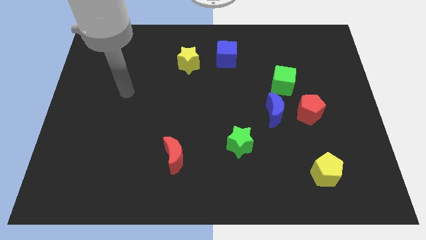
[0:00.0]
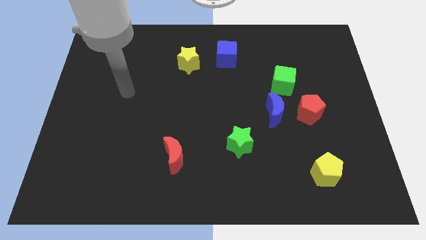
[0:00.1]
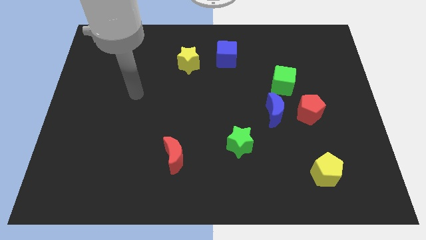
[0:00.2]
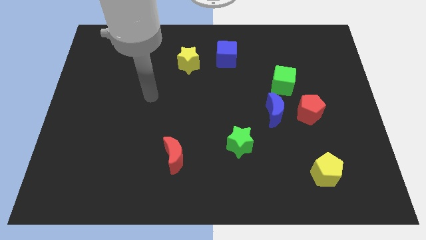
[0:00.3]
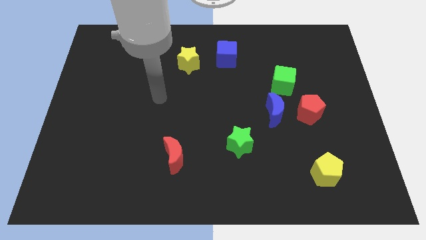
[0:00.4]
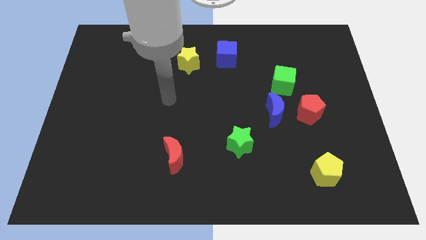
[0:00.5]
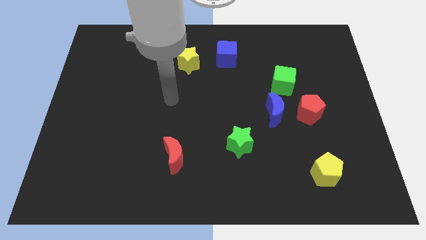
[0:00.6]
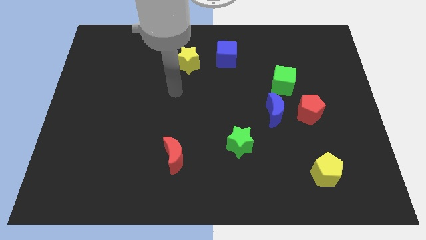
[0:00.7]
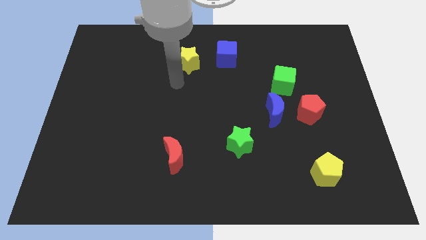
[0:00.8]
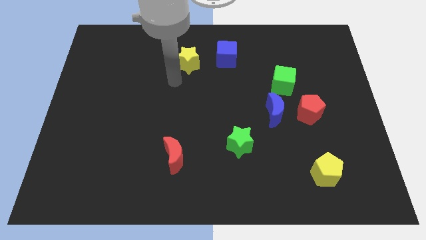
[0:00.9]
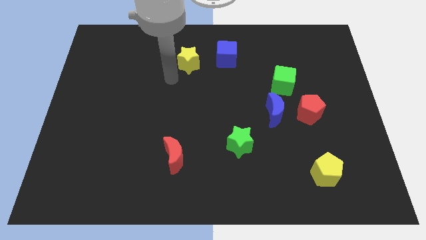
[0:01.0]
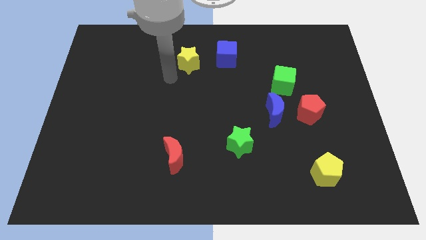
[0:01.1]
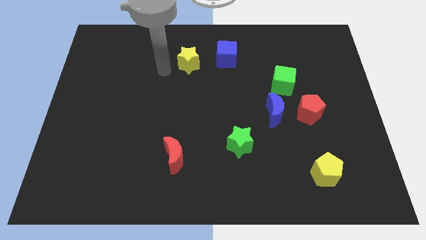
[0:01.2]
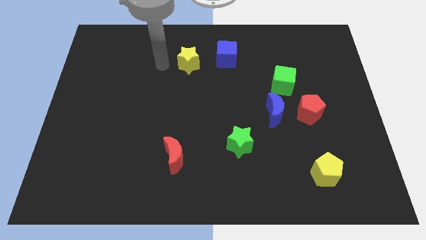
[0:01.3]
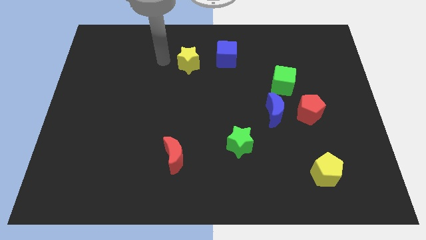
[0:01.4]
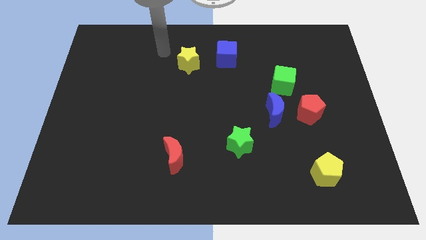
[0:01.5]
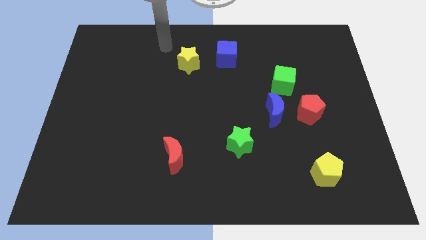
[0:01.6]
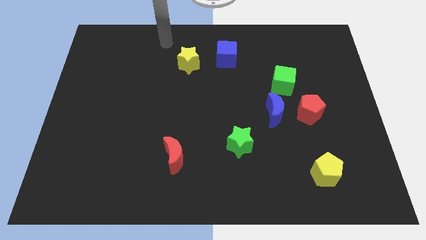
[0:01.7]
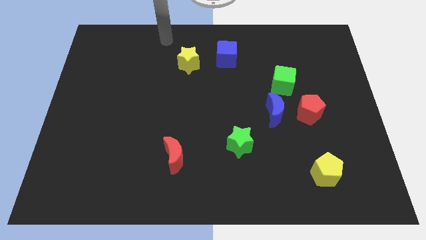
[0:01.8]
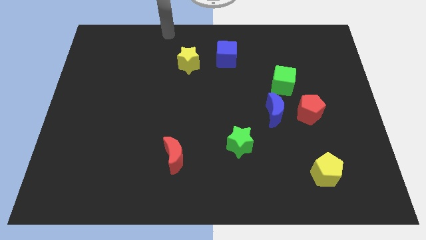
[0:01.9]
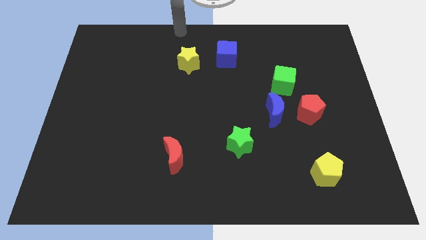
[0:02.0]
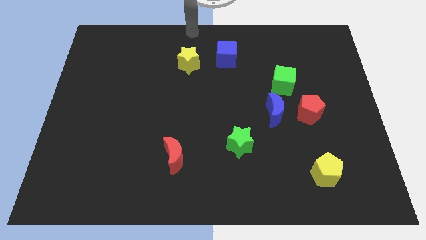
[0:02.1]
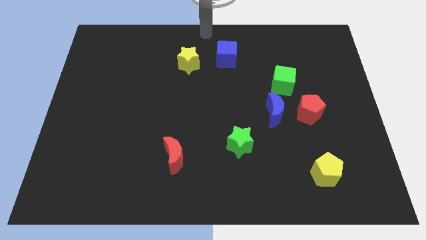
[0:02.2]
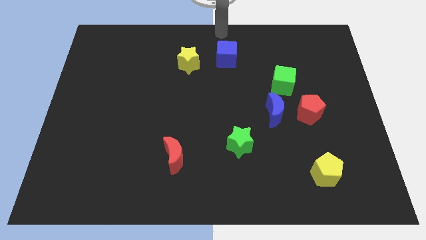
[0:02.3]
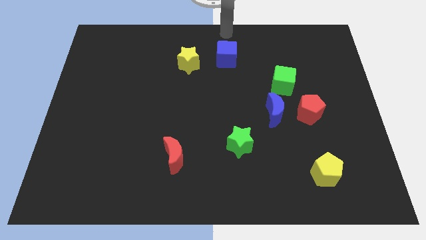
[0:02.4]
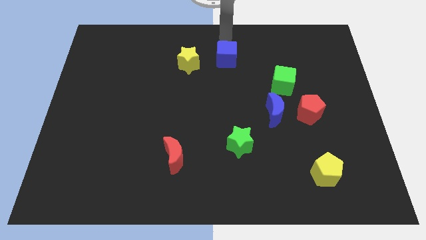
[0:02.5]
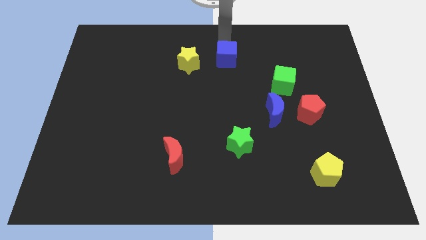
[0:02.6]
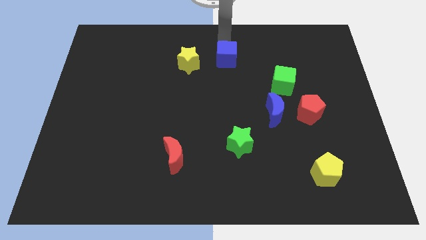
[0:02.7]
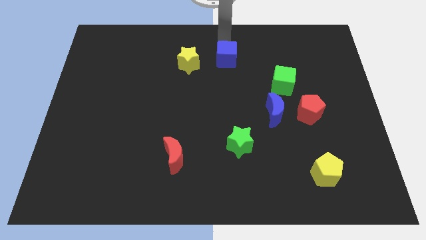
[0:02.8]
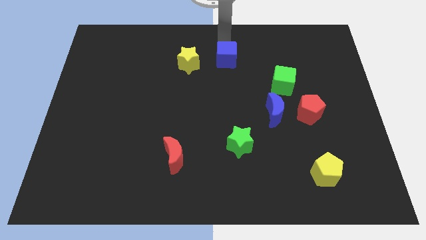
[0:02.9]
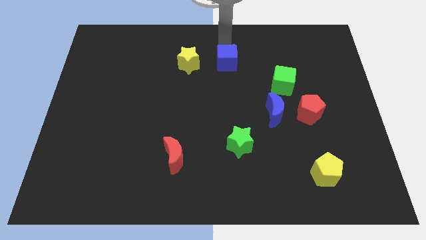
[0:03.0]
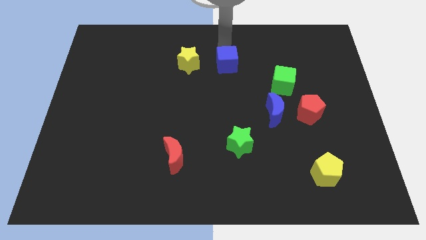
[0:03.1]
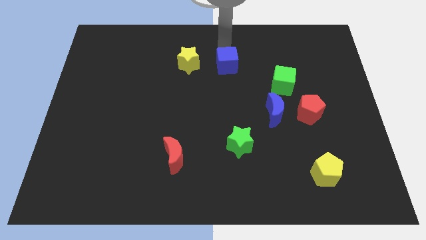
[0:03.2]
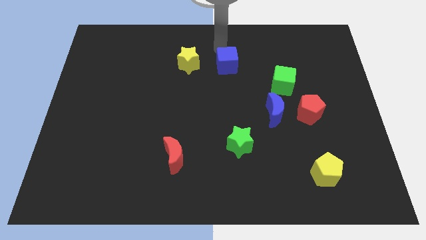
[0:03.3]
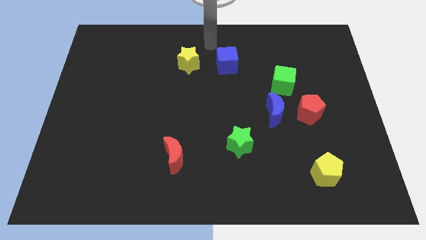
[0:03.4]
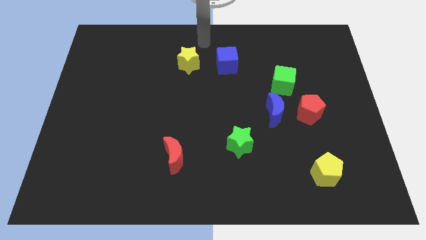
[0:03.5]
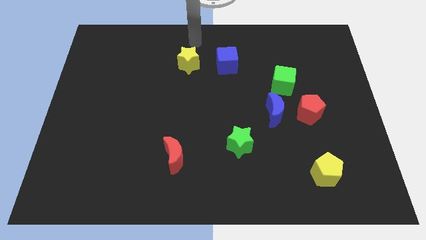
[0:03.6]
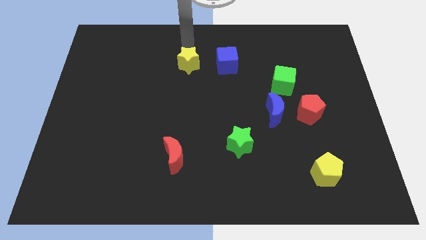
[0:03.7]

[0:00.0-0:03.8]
push the blue cube to the bottom of the board

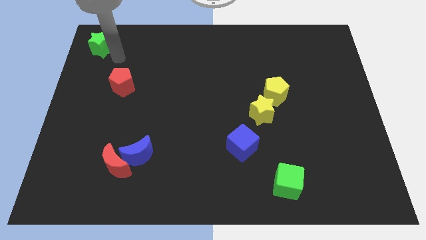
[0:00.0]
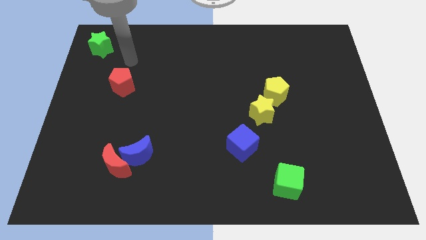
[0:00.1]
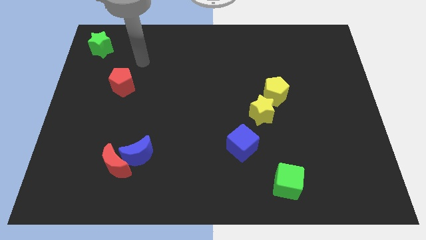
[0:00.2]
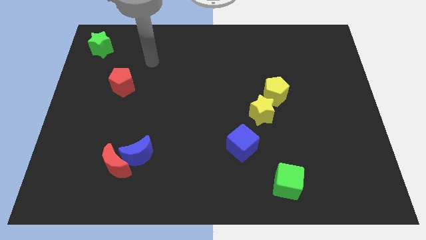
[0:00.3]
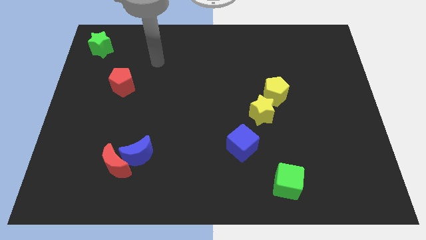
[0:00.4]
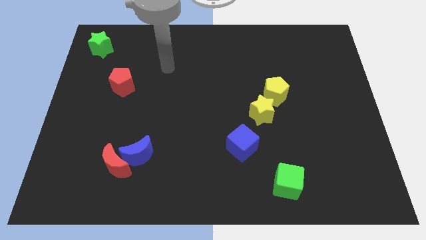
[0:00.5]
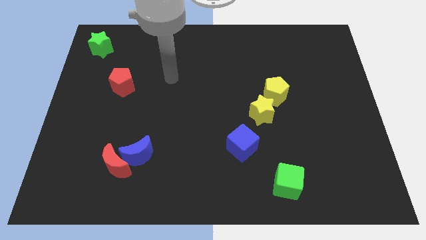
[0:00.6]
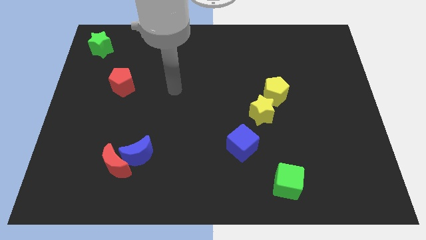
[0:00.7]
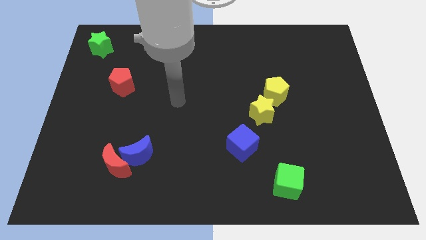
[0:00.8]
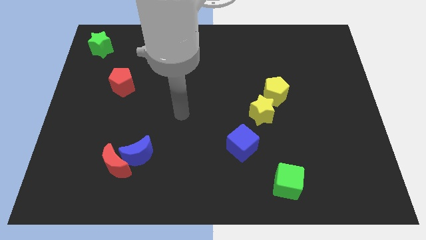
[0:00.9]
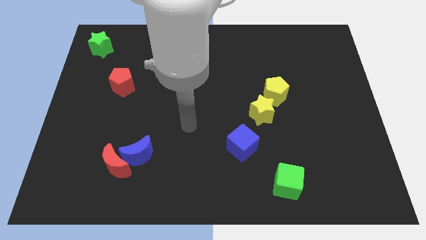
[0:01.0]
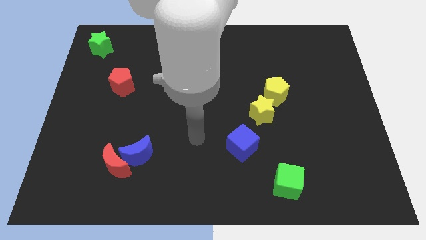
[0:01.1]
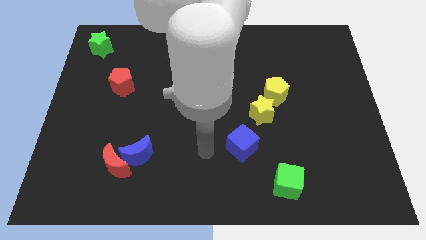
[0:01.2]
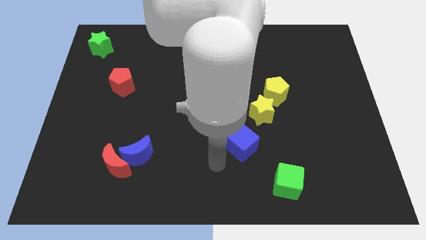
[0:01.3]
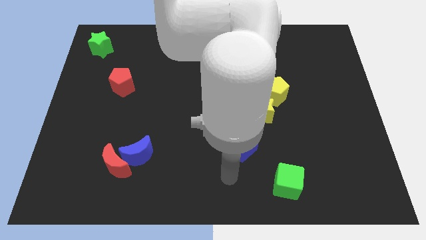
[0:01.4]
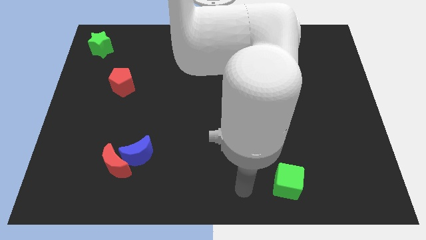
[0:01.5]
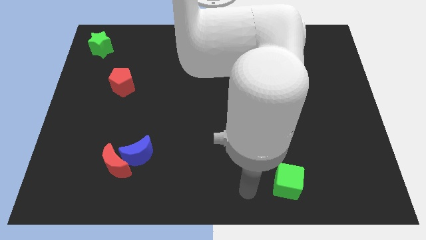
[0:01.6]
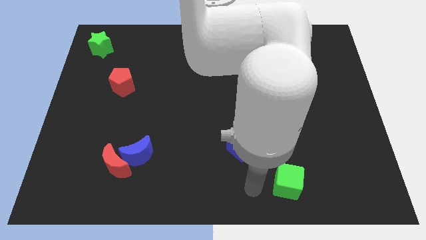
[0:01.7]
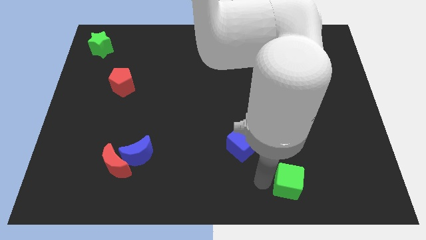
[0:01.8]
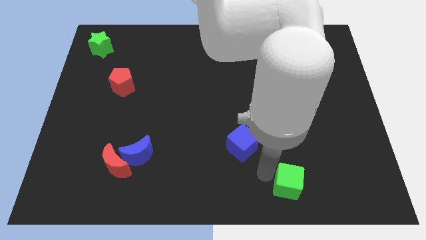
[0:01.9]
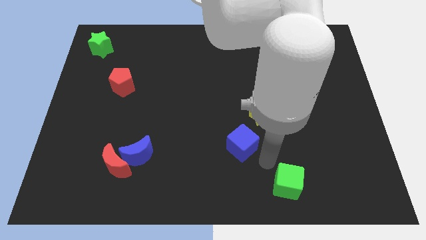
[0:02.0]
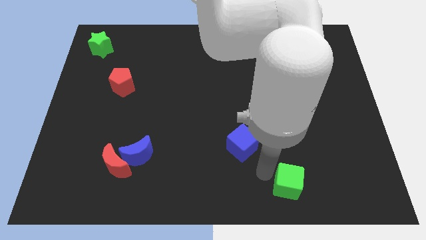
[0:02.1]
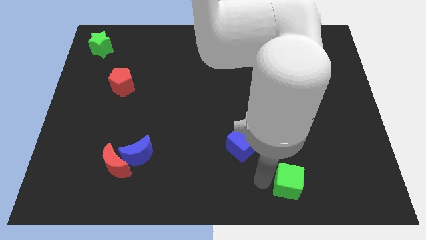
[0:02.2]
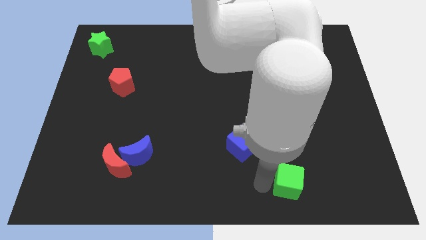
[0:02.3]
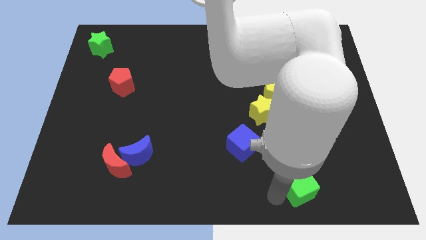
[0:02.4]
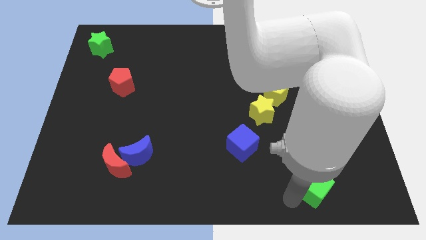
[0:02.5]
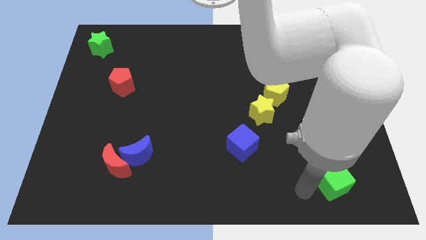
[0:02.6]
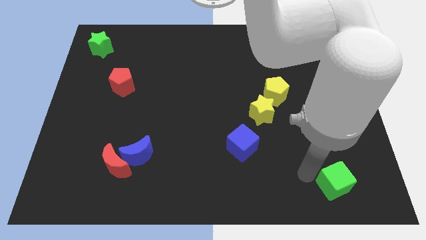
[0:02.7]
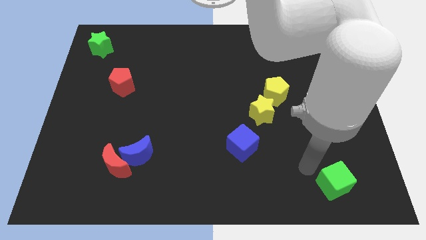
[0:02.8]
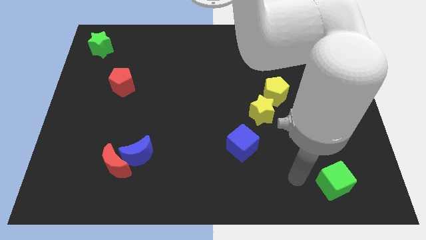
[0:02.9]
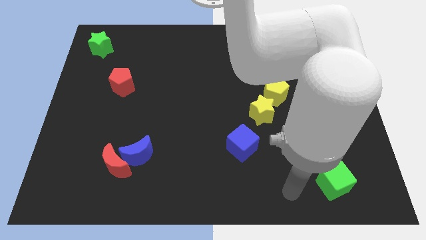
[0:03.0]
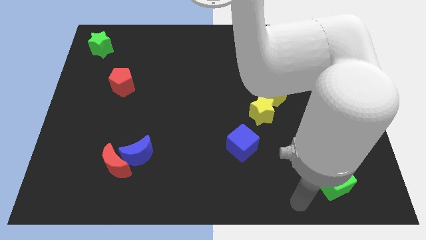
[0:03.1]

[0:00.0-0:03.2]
push the green cube towards the bottom right corner of the board

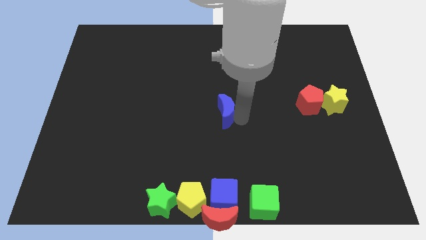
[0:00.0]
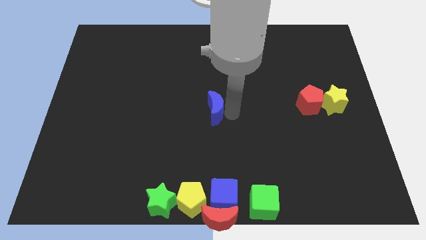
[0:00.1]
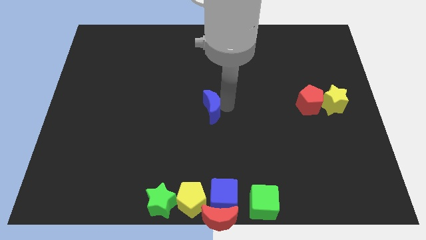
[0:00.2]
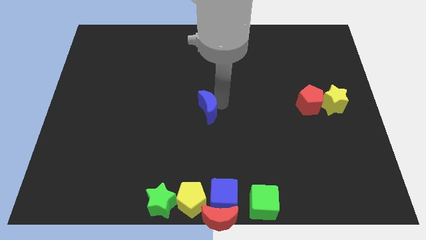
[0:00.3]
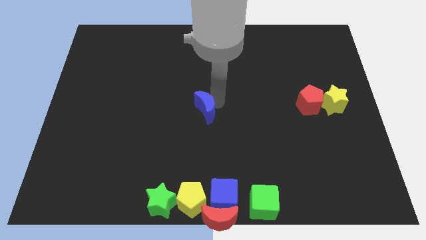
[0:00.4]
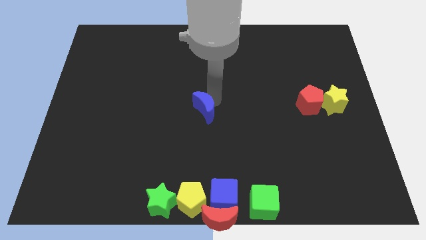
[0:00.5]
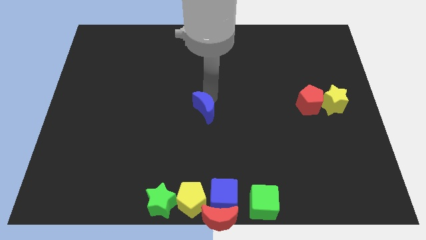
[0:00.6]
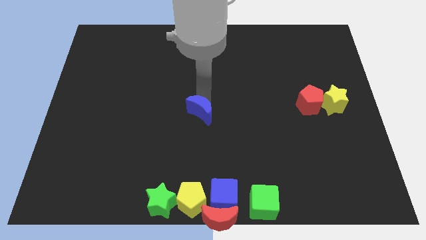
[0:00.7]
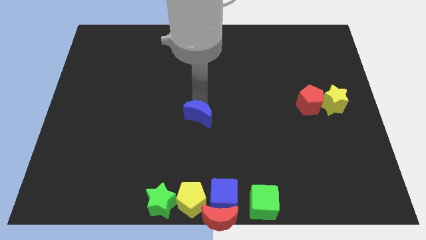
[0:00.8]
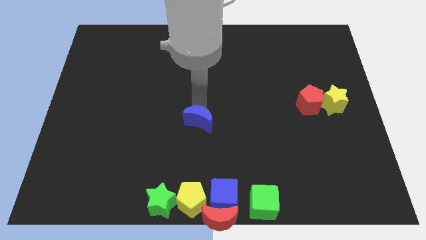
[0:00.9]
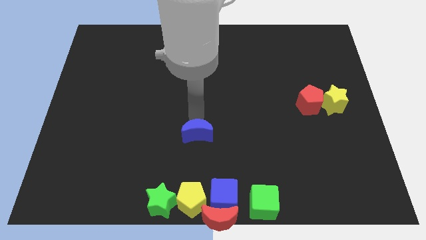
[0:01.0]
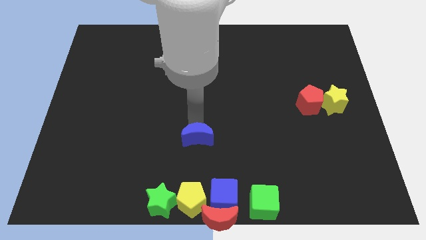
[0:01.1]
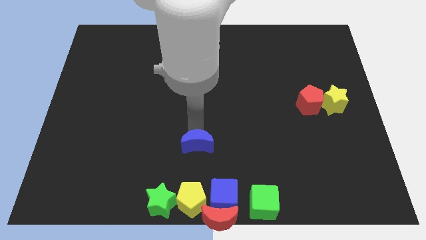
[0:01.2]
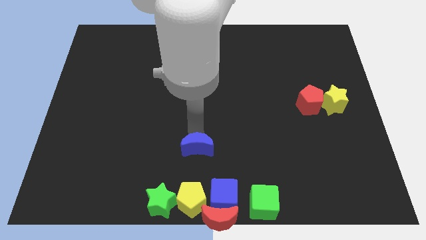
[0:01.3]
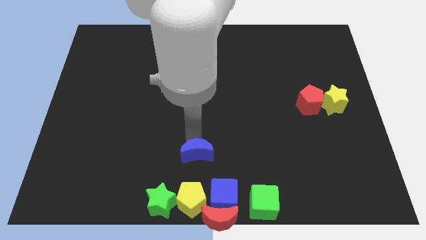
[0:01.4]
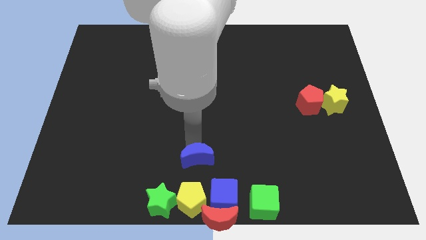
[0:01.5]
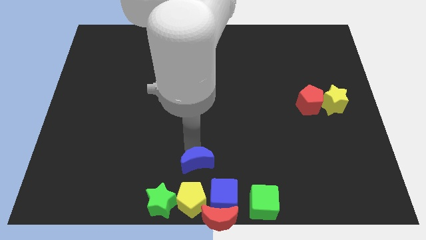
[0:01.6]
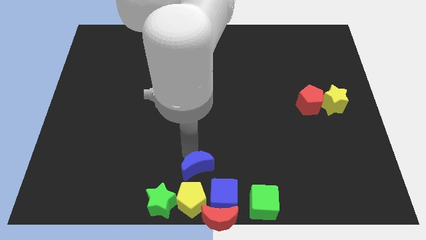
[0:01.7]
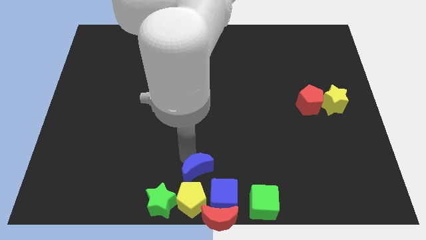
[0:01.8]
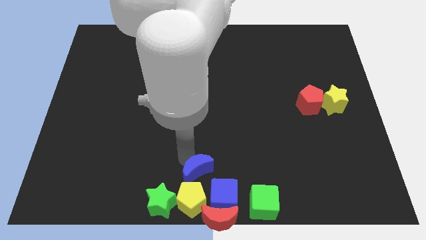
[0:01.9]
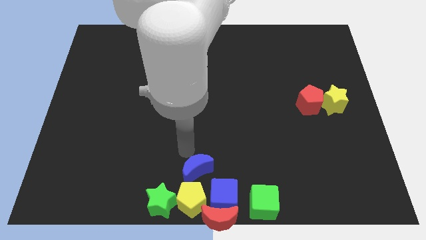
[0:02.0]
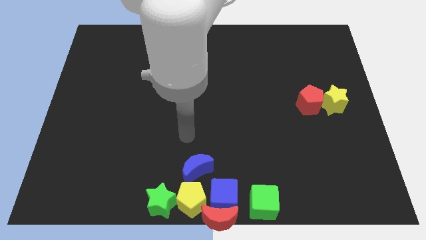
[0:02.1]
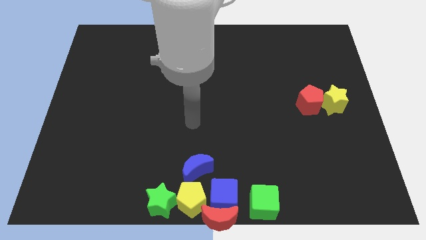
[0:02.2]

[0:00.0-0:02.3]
place the blue moon above the yellow pentagon
